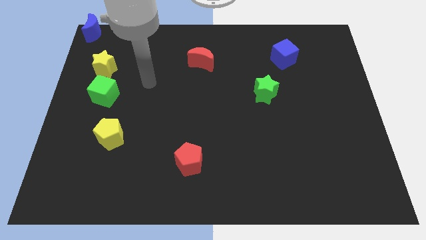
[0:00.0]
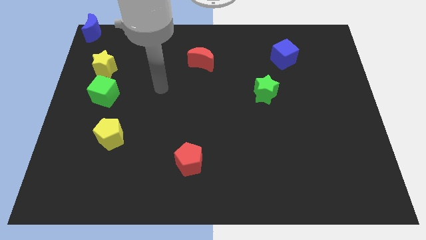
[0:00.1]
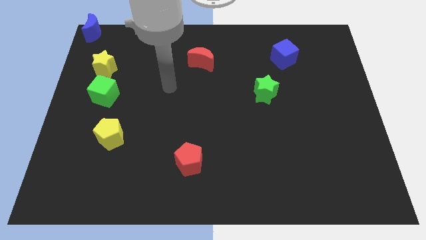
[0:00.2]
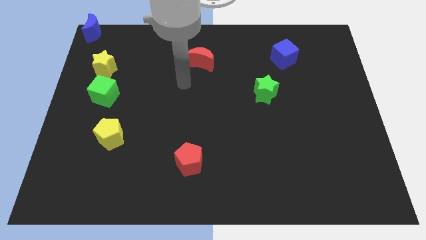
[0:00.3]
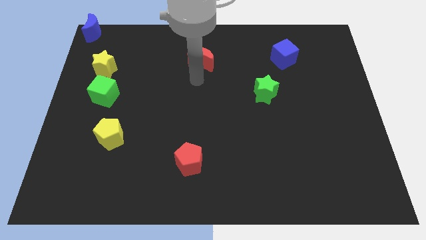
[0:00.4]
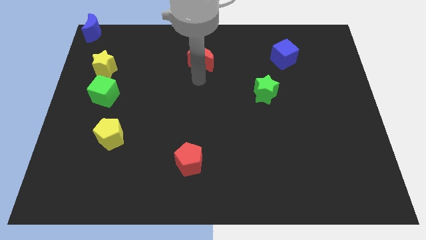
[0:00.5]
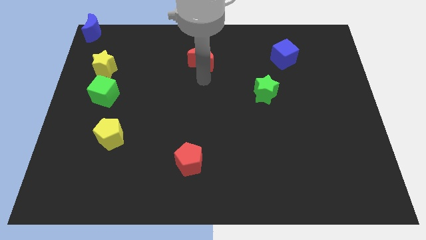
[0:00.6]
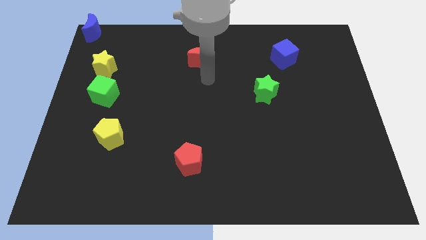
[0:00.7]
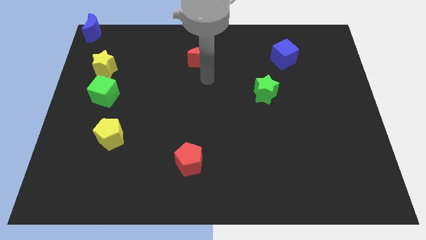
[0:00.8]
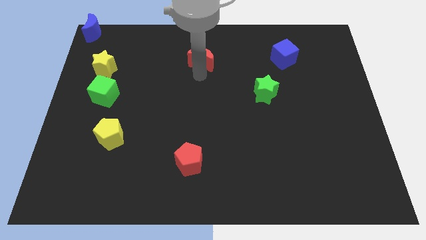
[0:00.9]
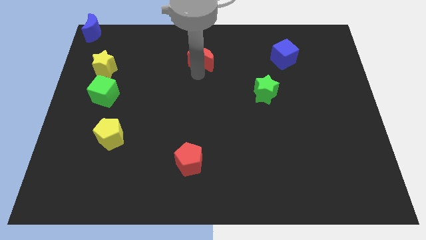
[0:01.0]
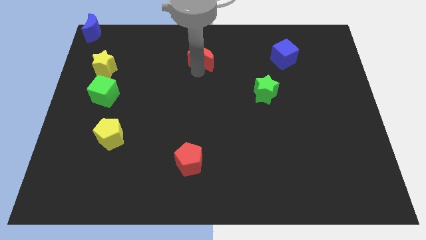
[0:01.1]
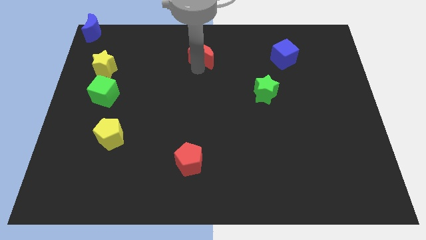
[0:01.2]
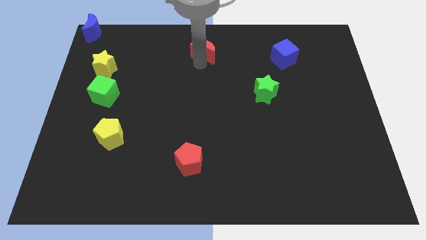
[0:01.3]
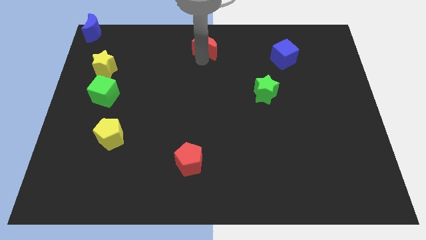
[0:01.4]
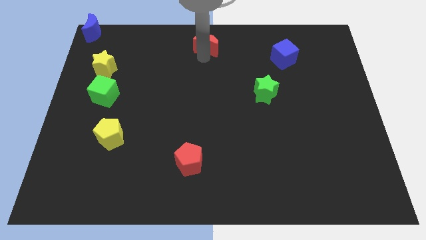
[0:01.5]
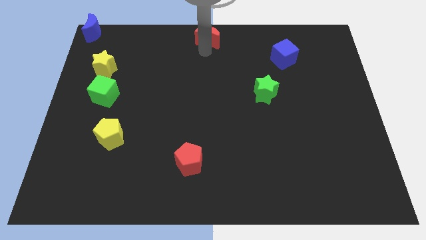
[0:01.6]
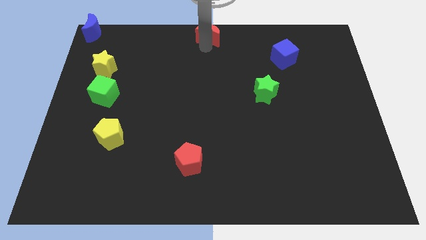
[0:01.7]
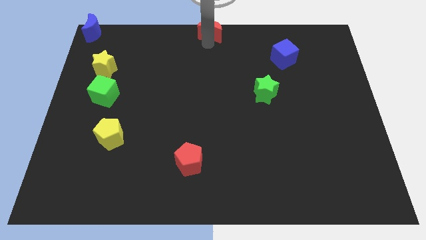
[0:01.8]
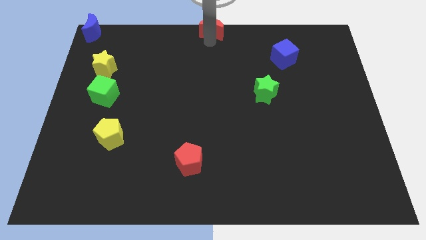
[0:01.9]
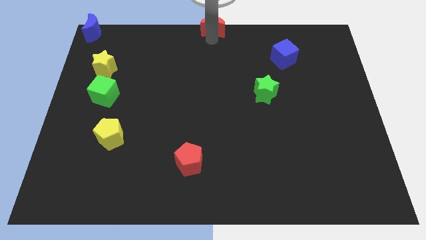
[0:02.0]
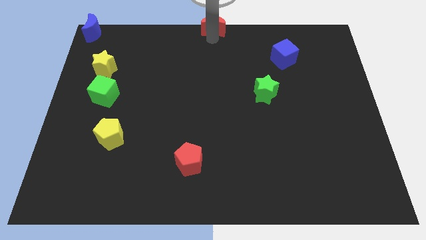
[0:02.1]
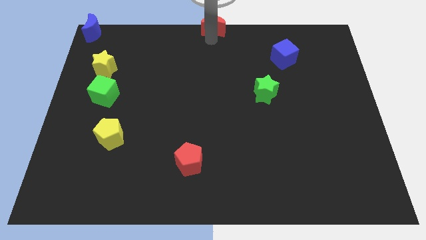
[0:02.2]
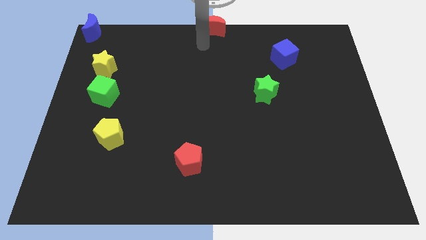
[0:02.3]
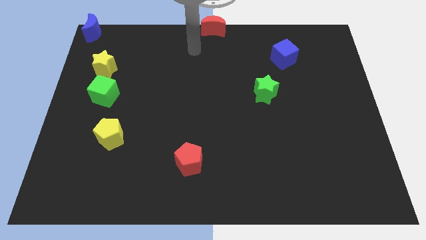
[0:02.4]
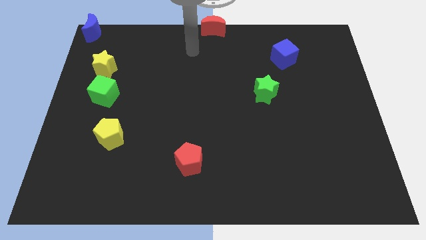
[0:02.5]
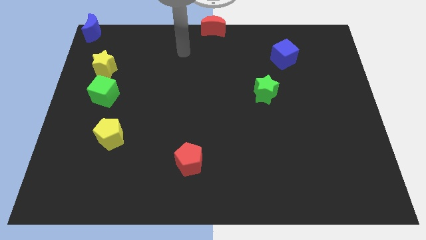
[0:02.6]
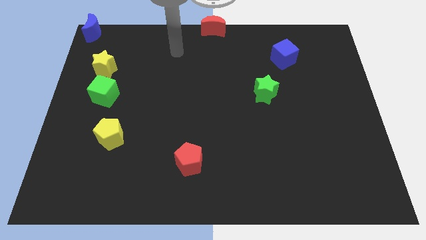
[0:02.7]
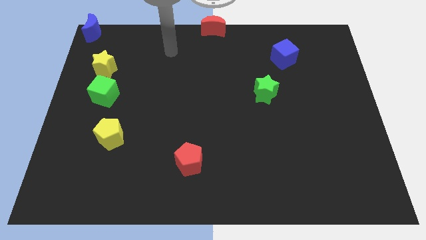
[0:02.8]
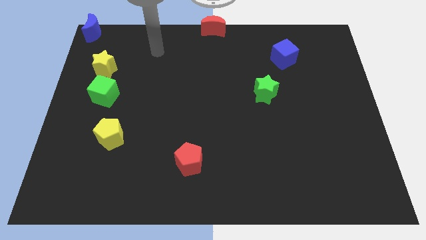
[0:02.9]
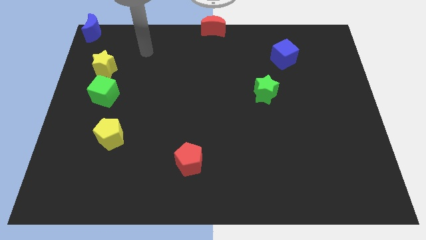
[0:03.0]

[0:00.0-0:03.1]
drag red moon to the top center

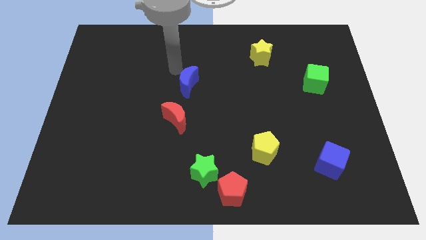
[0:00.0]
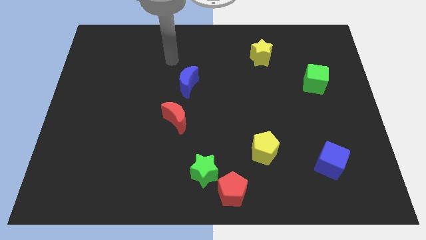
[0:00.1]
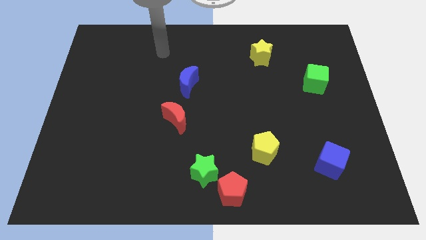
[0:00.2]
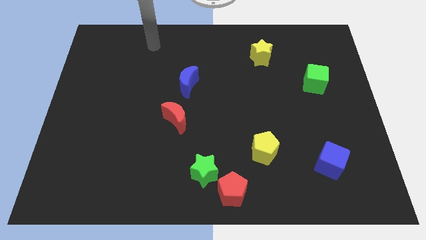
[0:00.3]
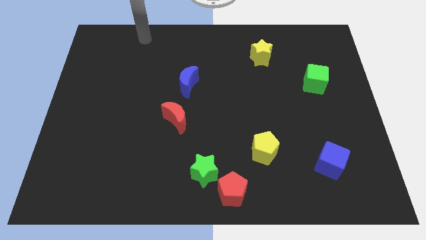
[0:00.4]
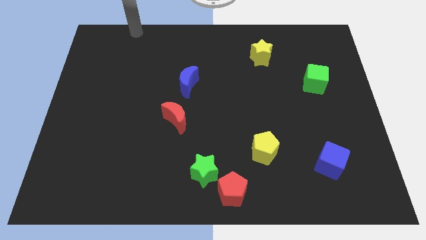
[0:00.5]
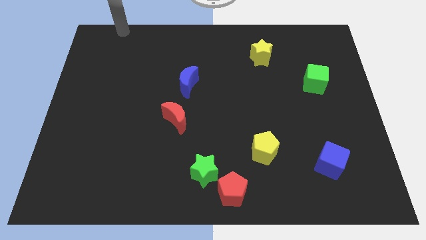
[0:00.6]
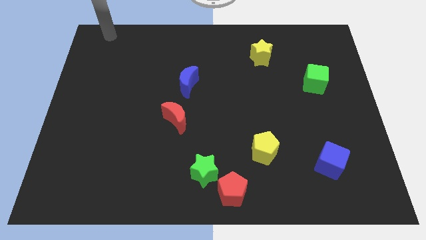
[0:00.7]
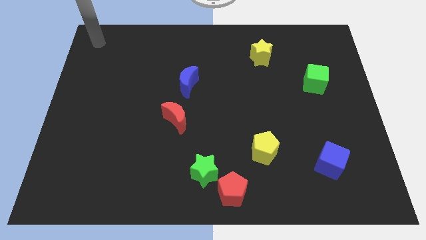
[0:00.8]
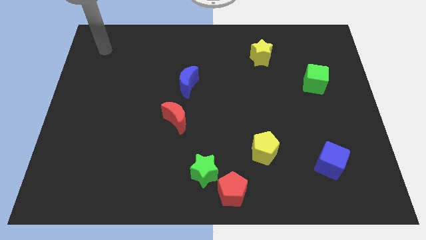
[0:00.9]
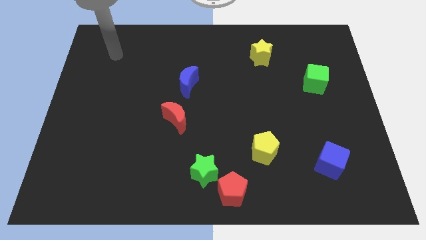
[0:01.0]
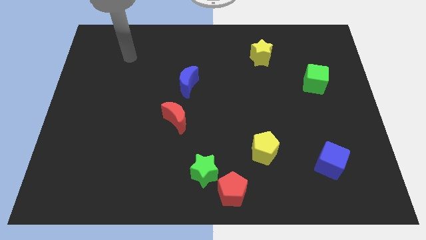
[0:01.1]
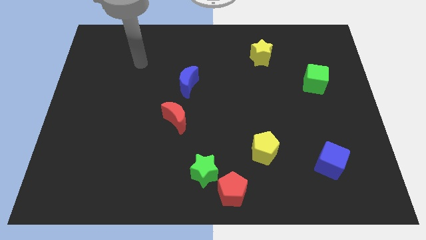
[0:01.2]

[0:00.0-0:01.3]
move your arm towards the top left of board

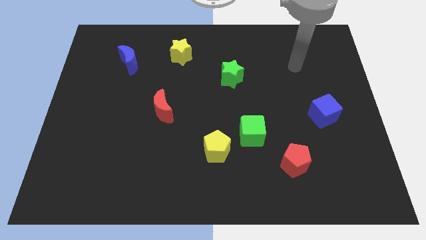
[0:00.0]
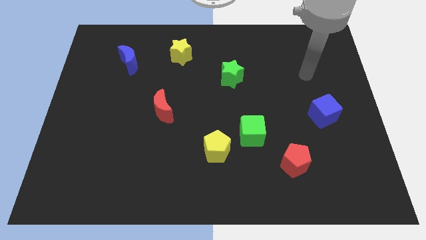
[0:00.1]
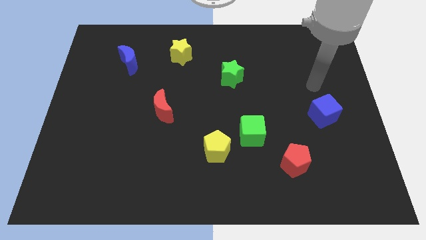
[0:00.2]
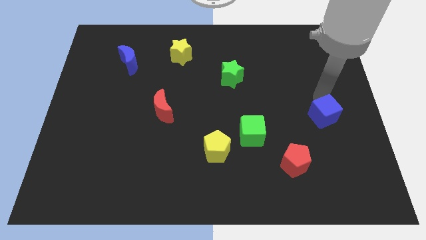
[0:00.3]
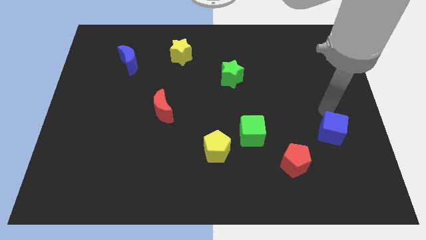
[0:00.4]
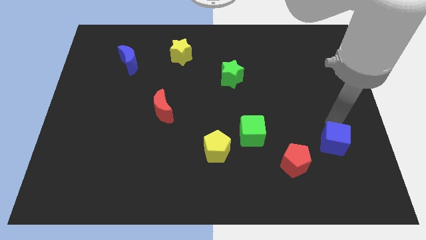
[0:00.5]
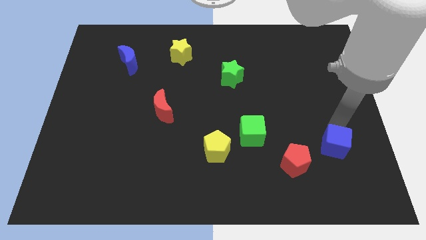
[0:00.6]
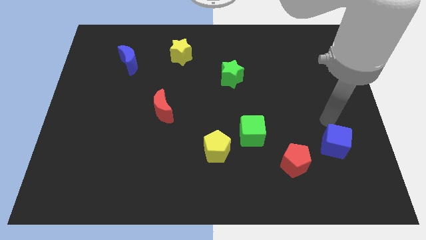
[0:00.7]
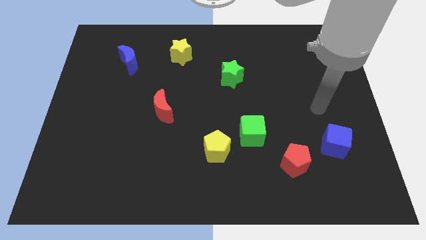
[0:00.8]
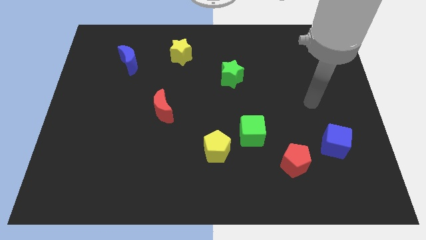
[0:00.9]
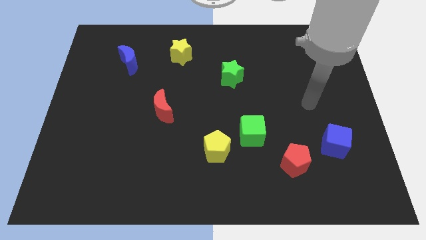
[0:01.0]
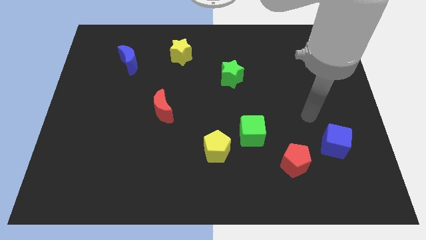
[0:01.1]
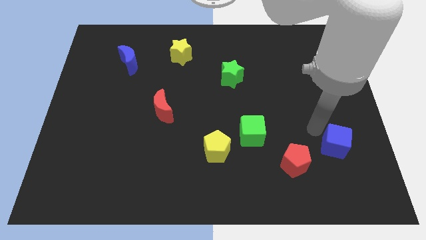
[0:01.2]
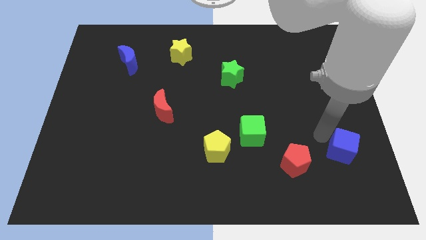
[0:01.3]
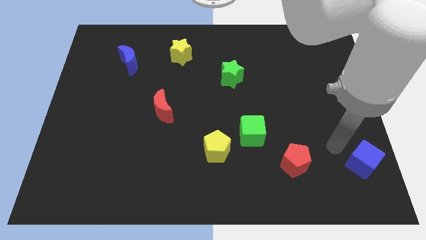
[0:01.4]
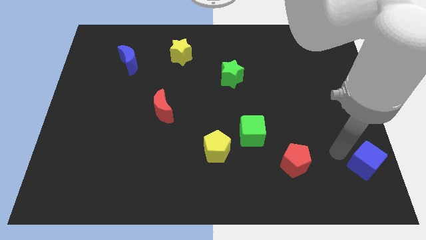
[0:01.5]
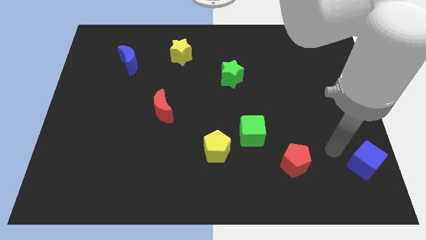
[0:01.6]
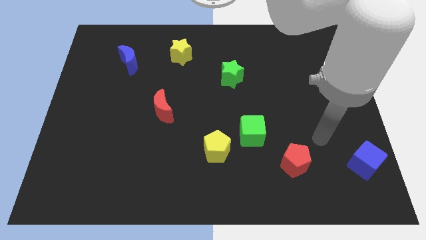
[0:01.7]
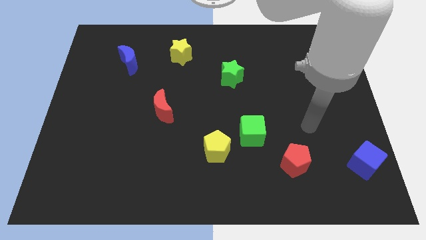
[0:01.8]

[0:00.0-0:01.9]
place the blue cube to the right side of the red pentagon

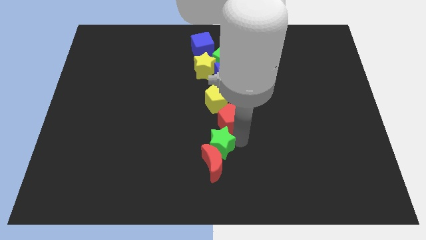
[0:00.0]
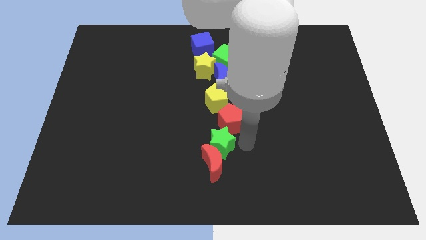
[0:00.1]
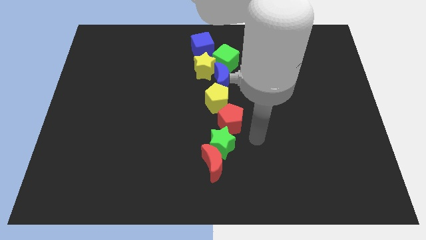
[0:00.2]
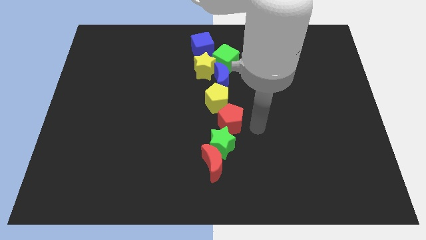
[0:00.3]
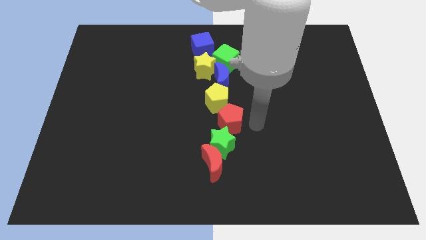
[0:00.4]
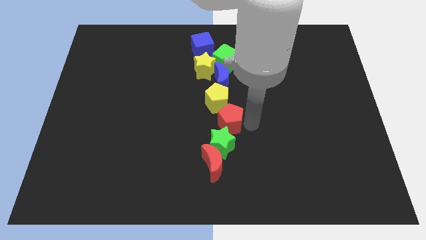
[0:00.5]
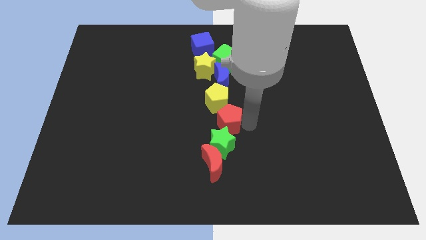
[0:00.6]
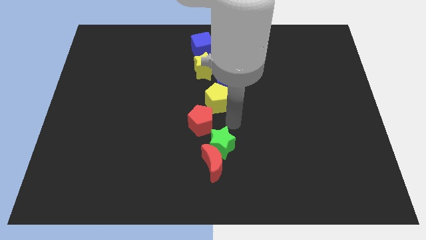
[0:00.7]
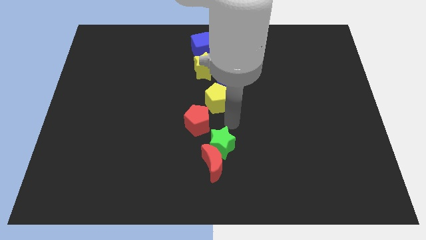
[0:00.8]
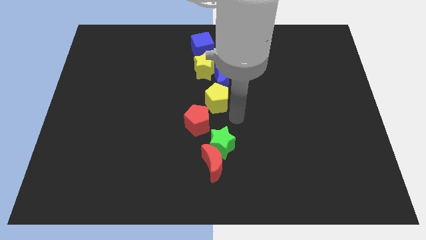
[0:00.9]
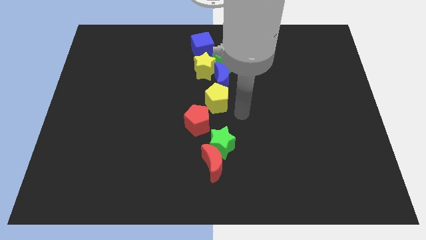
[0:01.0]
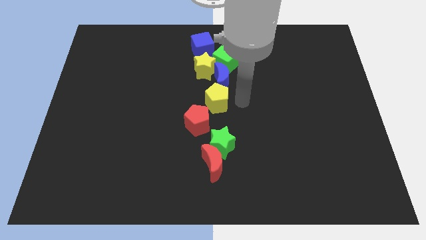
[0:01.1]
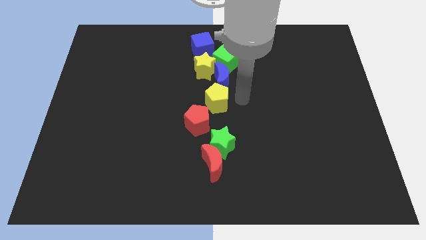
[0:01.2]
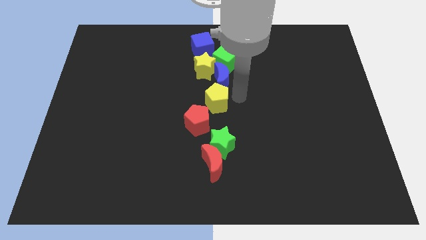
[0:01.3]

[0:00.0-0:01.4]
slide the red pentagon slightly to the left

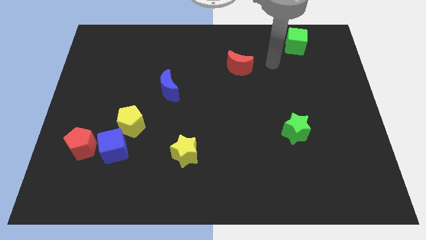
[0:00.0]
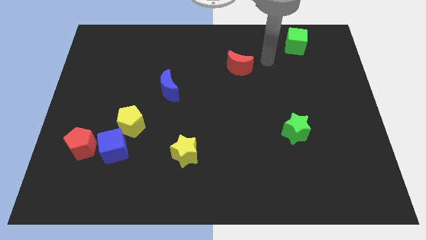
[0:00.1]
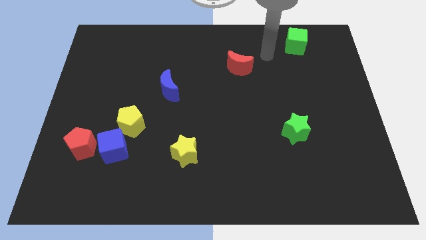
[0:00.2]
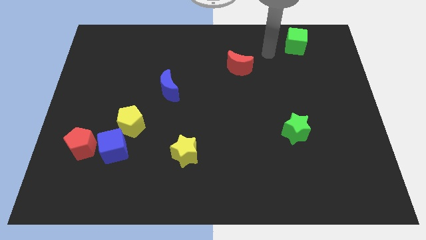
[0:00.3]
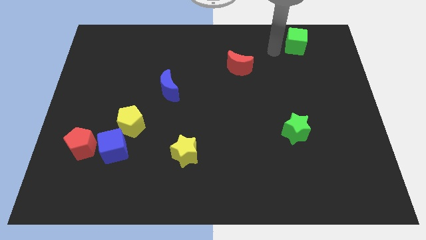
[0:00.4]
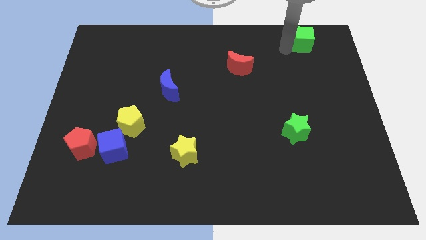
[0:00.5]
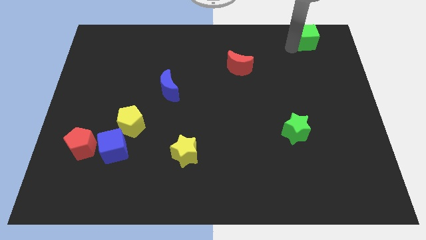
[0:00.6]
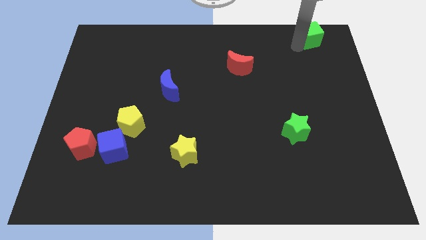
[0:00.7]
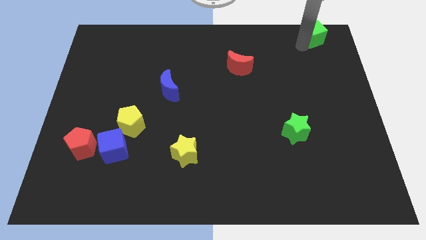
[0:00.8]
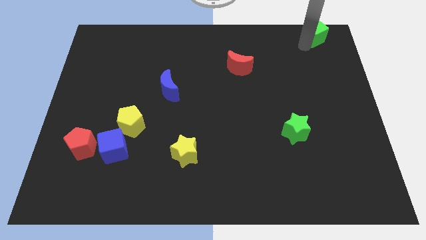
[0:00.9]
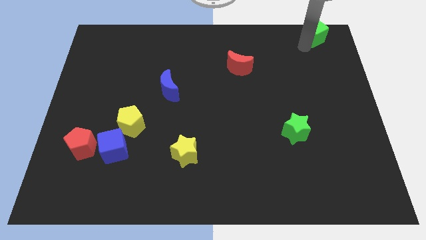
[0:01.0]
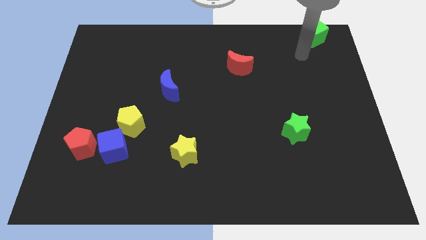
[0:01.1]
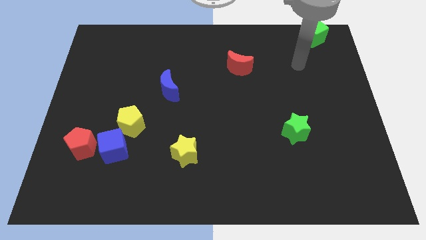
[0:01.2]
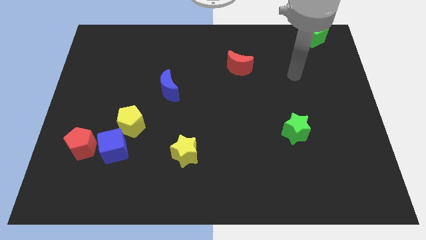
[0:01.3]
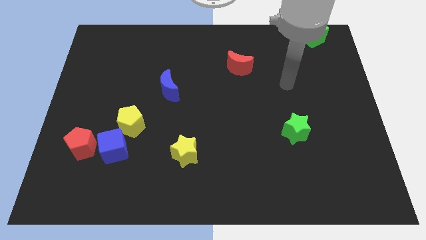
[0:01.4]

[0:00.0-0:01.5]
push the green cube to the top right corner of the board
